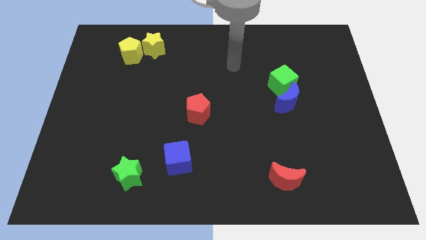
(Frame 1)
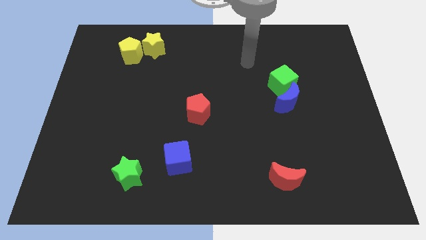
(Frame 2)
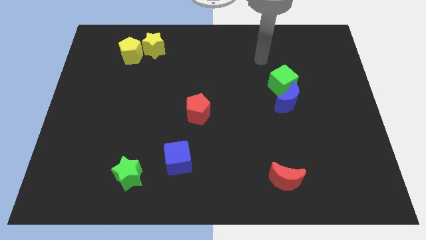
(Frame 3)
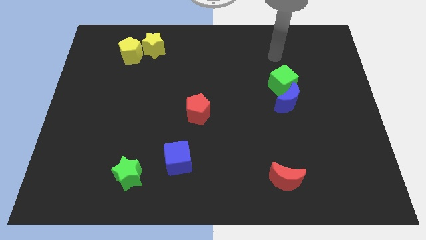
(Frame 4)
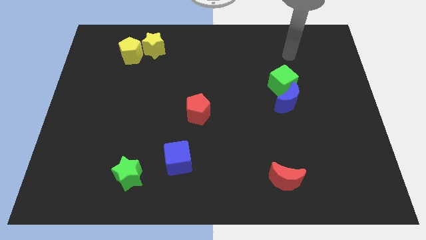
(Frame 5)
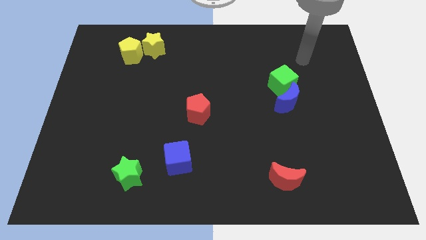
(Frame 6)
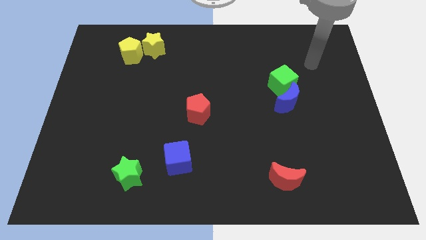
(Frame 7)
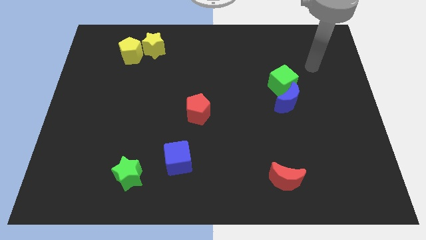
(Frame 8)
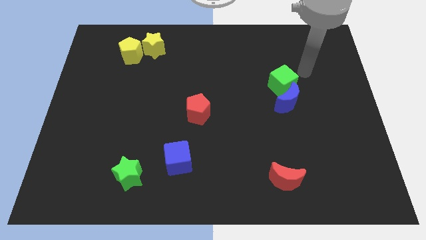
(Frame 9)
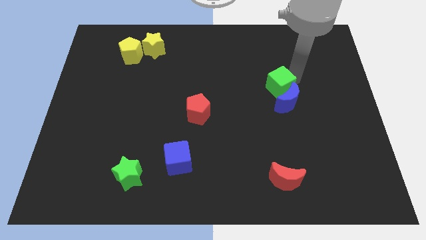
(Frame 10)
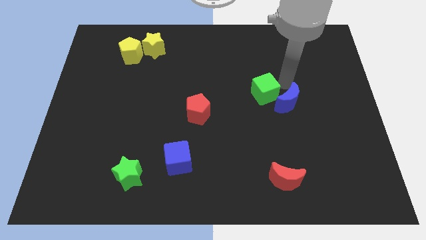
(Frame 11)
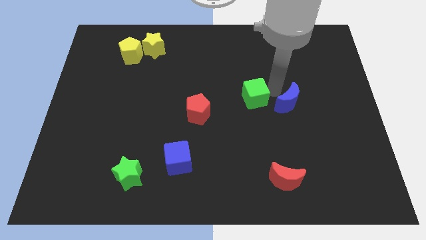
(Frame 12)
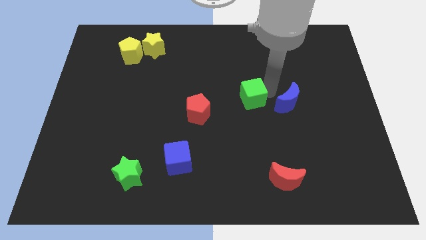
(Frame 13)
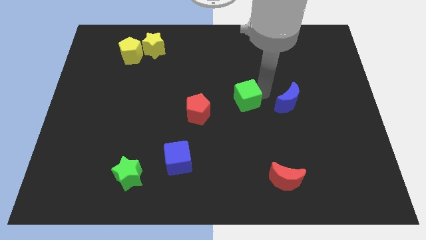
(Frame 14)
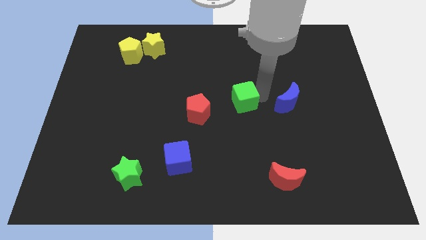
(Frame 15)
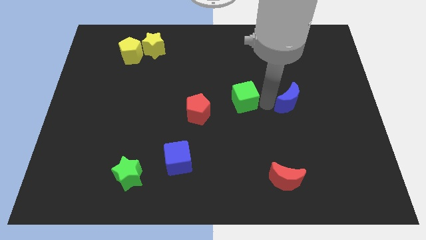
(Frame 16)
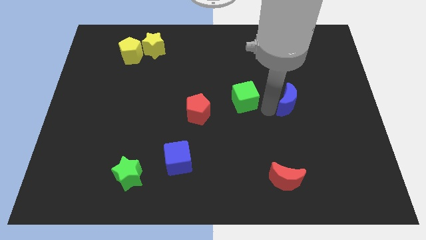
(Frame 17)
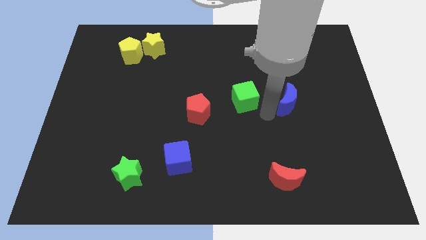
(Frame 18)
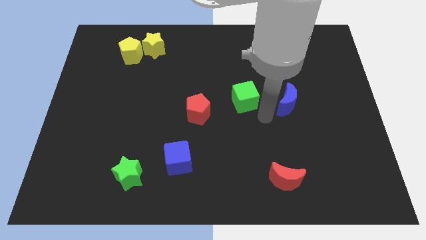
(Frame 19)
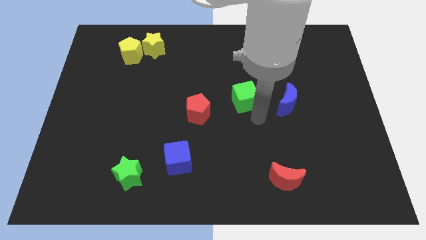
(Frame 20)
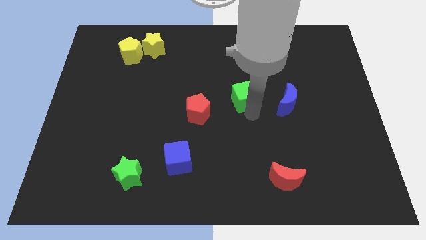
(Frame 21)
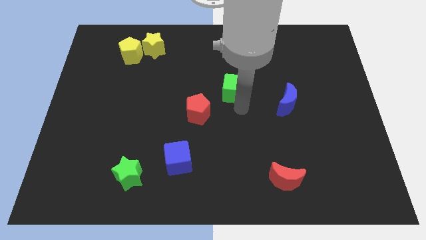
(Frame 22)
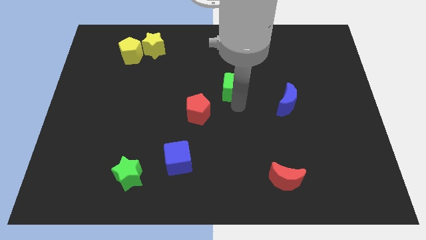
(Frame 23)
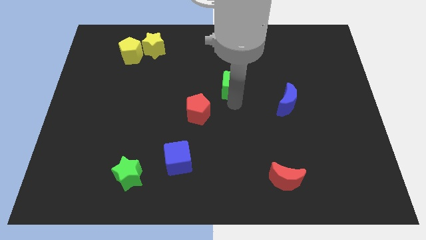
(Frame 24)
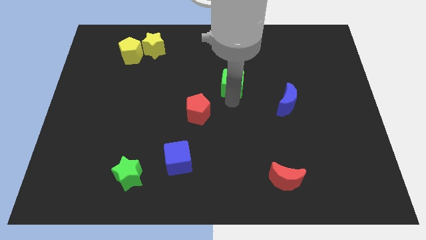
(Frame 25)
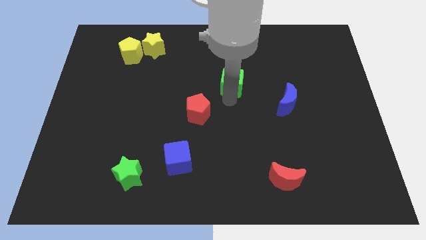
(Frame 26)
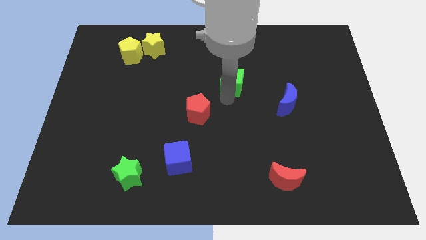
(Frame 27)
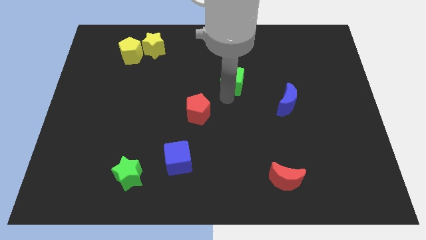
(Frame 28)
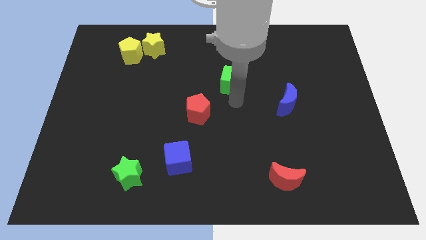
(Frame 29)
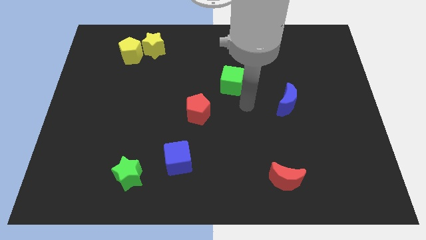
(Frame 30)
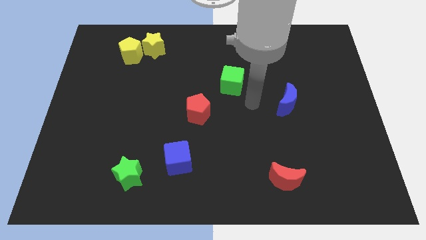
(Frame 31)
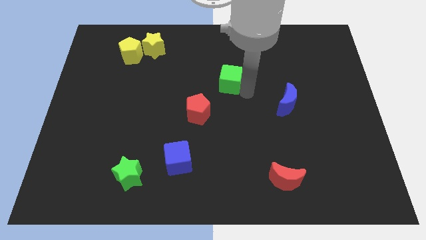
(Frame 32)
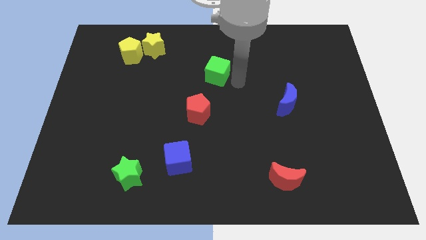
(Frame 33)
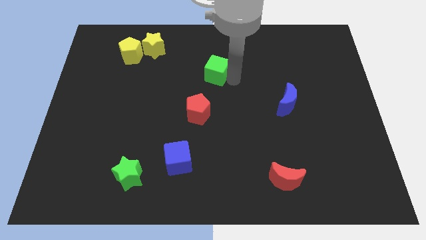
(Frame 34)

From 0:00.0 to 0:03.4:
move the green cube to the top of the board

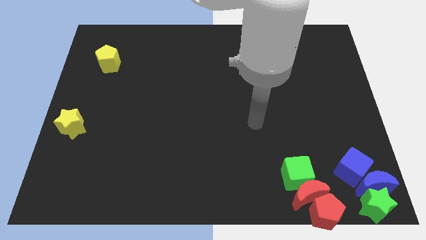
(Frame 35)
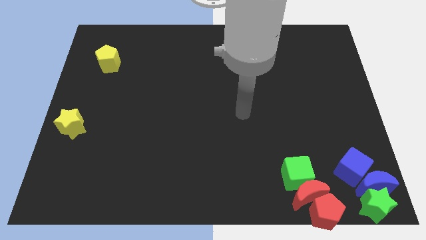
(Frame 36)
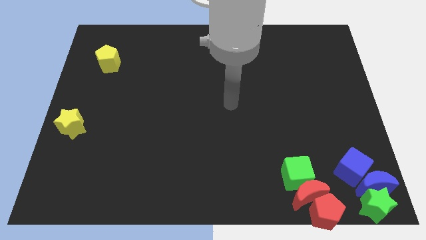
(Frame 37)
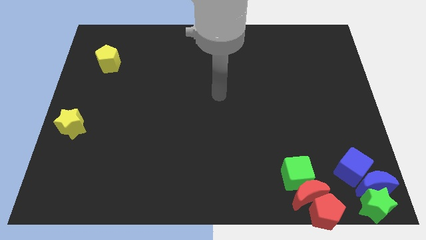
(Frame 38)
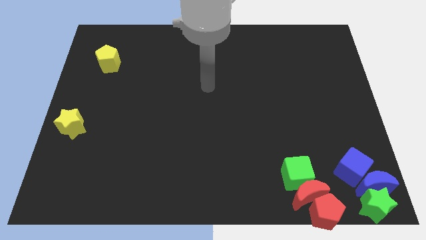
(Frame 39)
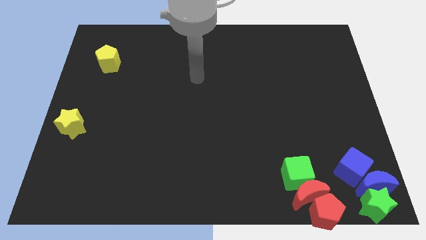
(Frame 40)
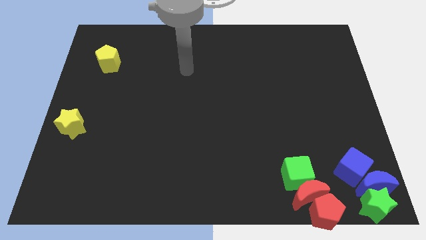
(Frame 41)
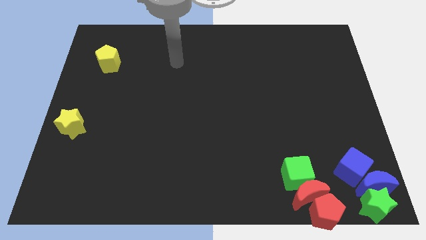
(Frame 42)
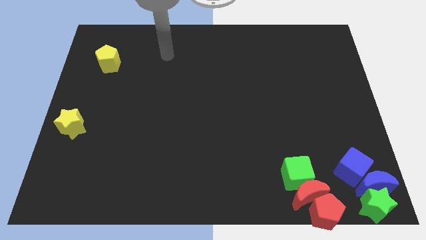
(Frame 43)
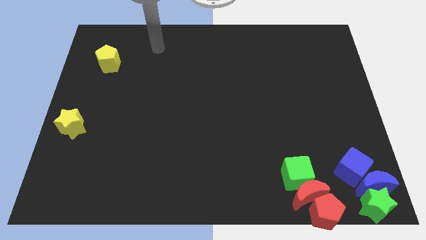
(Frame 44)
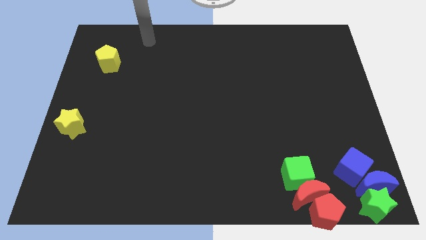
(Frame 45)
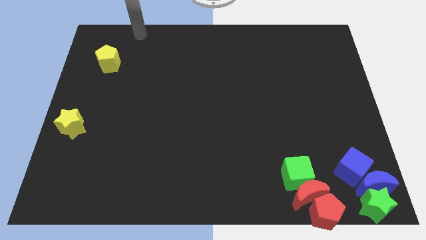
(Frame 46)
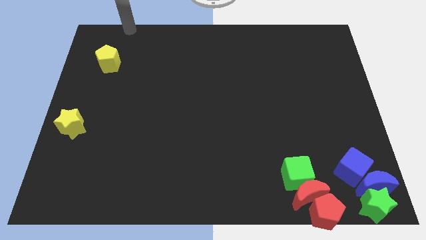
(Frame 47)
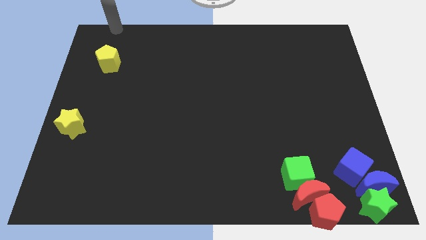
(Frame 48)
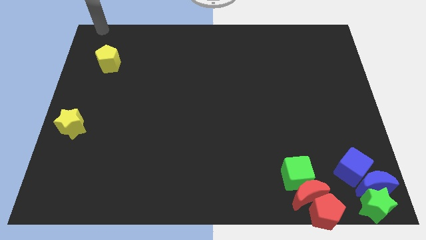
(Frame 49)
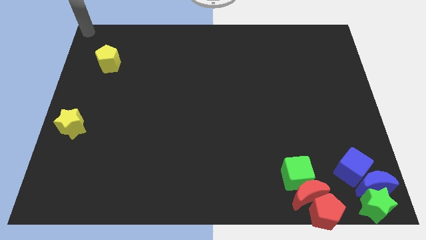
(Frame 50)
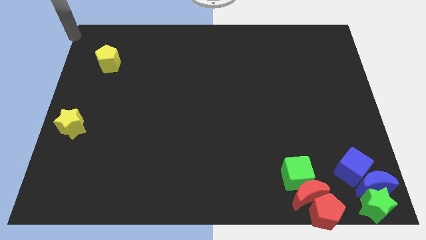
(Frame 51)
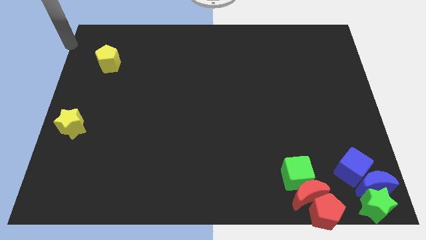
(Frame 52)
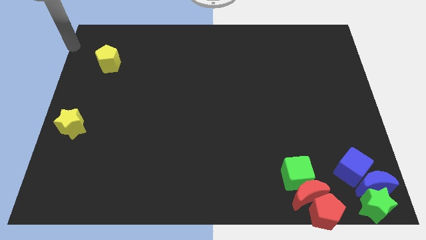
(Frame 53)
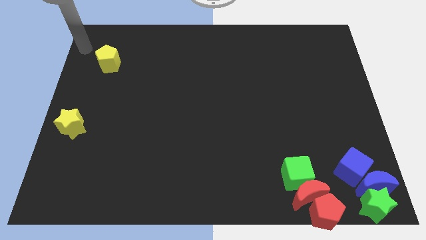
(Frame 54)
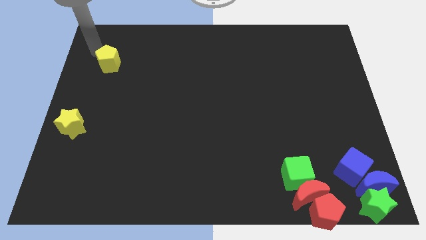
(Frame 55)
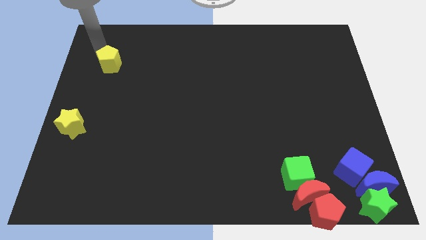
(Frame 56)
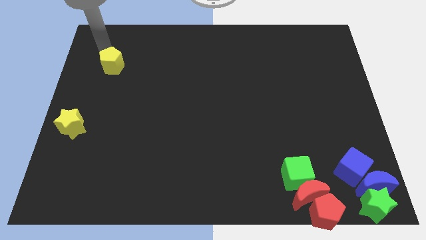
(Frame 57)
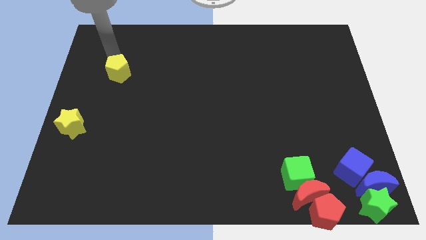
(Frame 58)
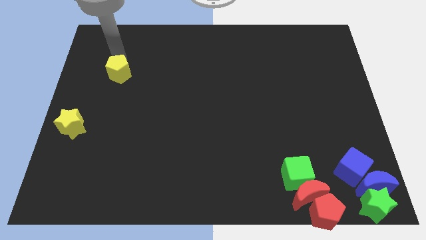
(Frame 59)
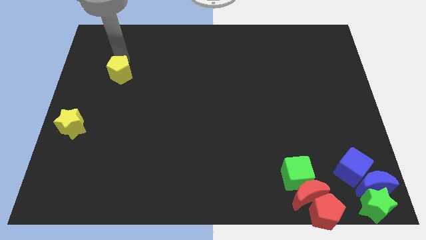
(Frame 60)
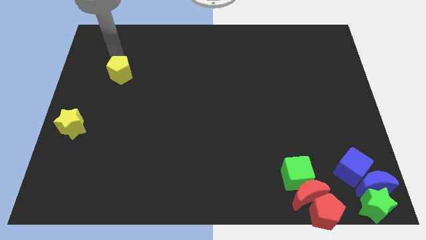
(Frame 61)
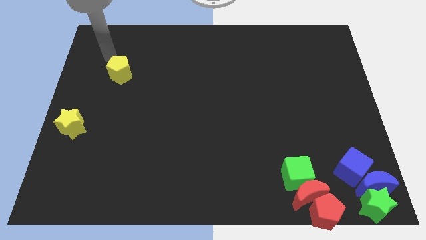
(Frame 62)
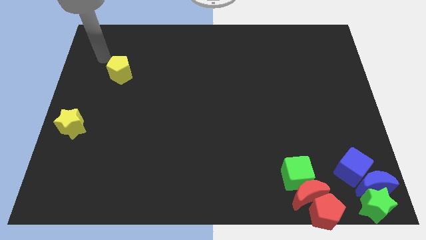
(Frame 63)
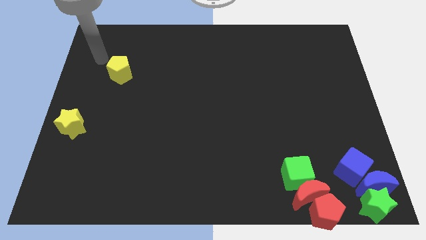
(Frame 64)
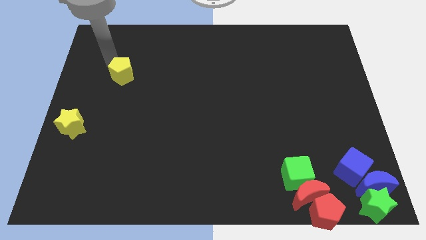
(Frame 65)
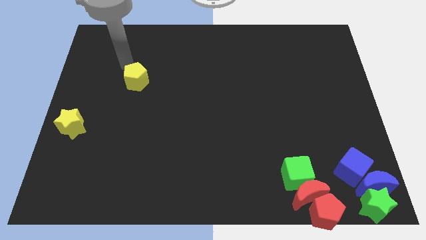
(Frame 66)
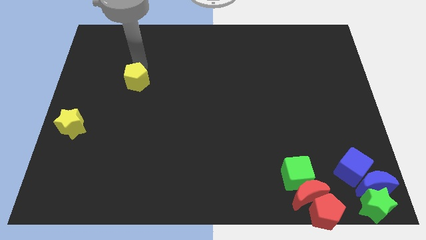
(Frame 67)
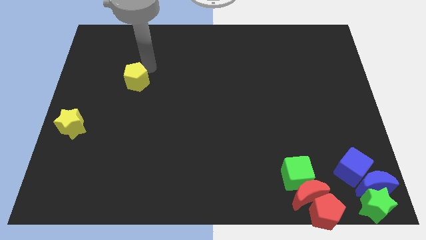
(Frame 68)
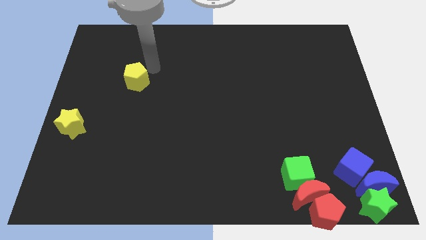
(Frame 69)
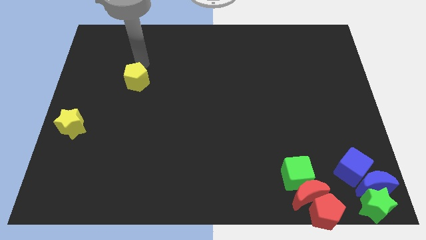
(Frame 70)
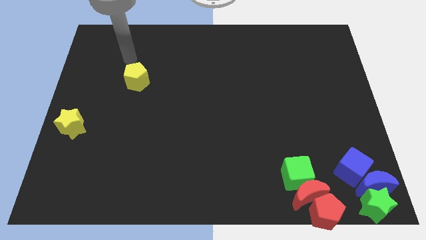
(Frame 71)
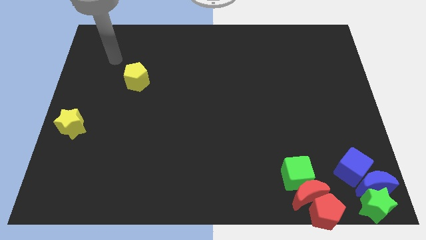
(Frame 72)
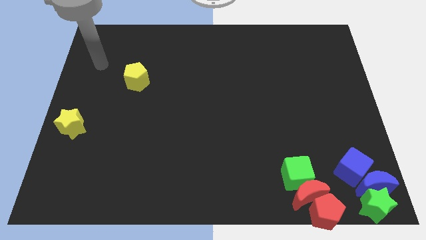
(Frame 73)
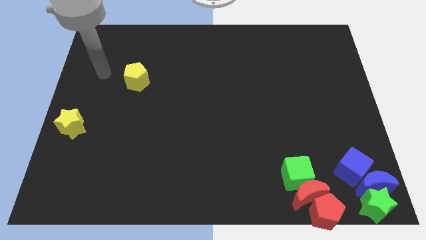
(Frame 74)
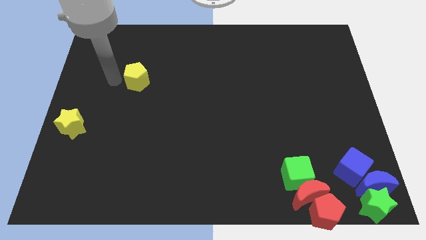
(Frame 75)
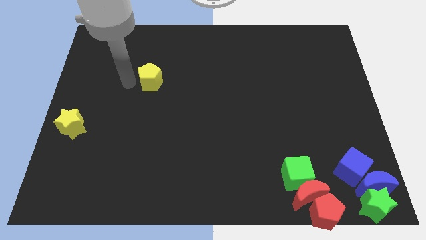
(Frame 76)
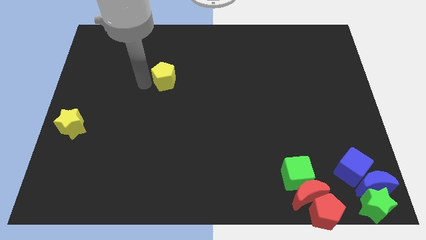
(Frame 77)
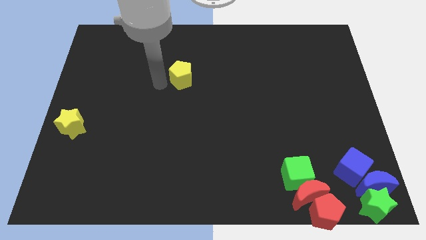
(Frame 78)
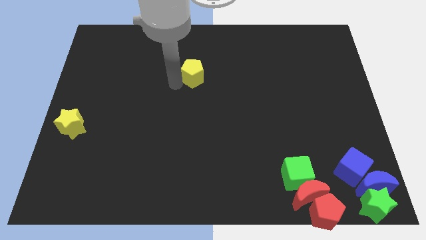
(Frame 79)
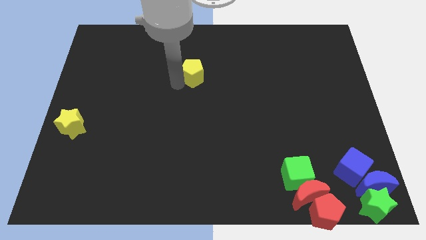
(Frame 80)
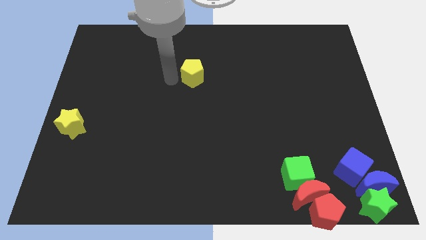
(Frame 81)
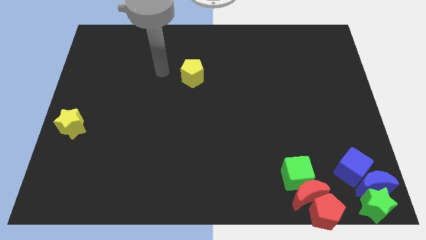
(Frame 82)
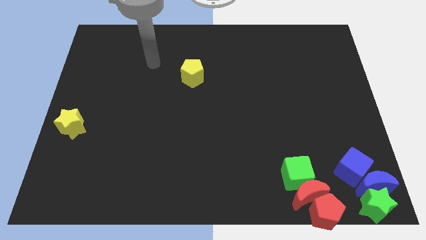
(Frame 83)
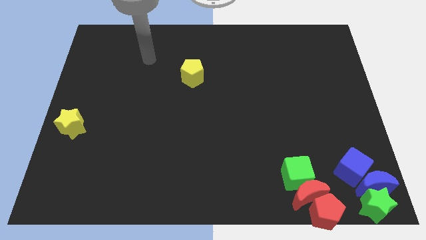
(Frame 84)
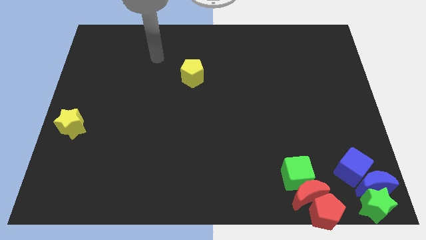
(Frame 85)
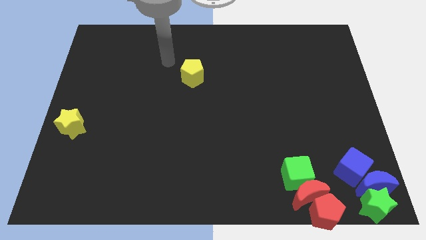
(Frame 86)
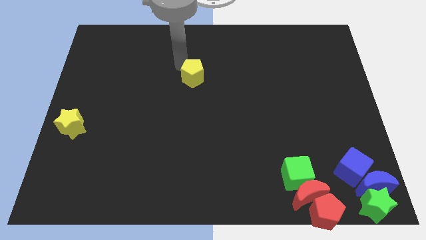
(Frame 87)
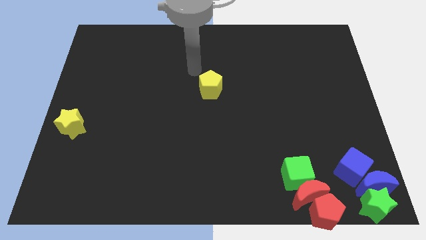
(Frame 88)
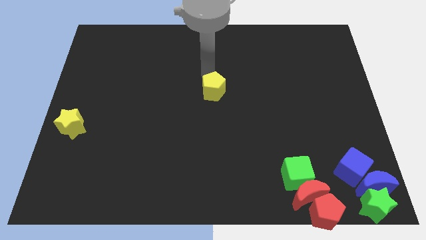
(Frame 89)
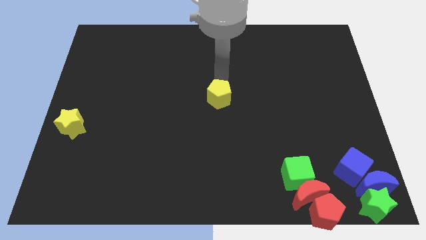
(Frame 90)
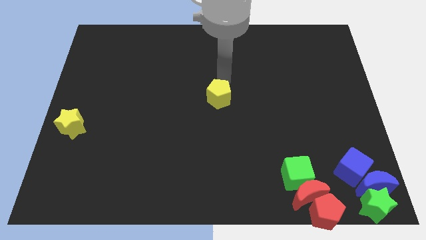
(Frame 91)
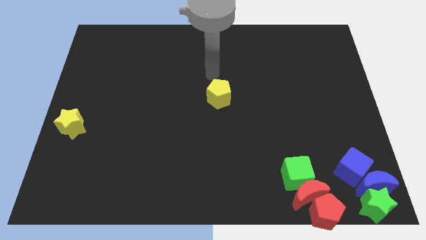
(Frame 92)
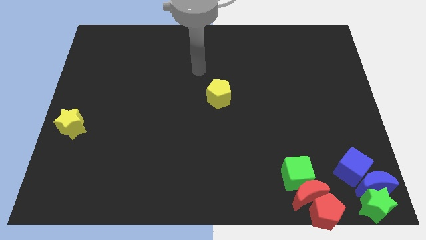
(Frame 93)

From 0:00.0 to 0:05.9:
move the yellow pentagon towards the center of the board
